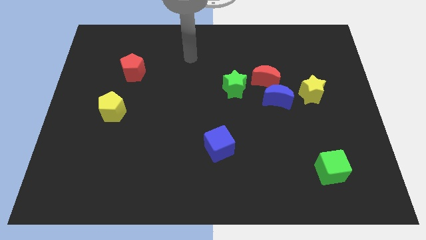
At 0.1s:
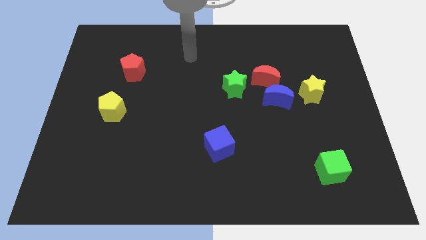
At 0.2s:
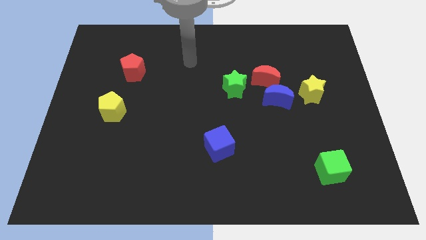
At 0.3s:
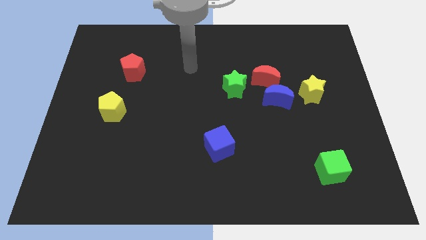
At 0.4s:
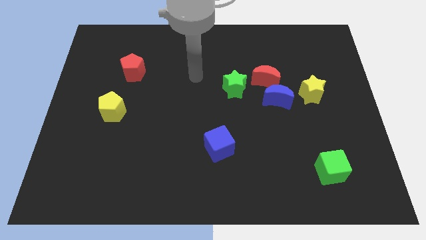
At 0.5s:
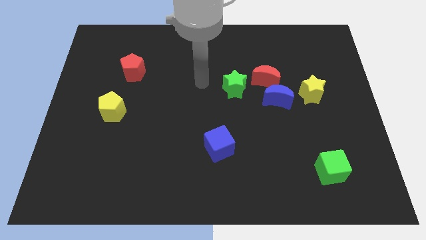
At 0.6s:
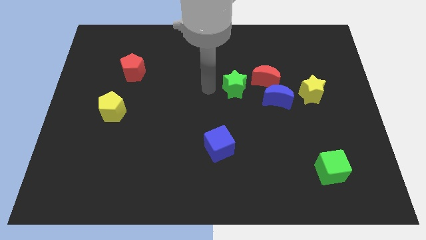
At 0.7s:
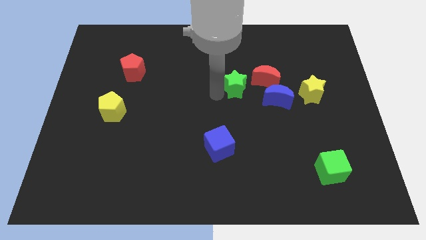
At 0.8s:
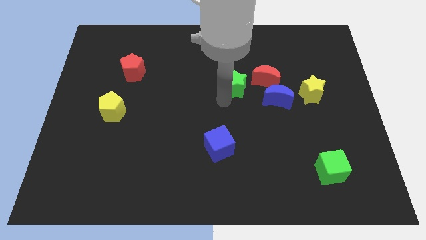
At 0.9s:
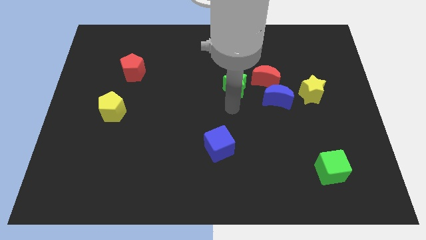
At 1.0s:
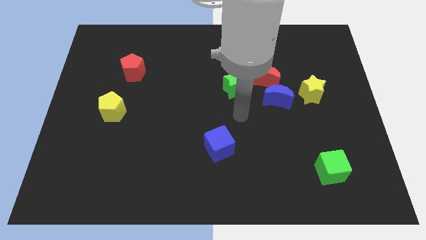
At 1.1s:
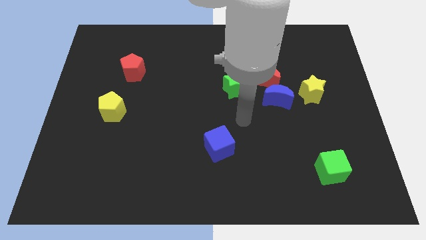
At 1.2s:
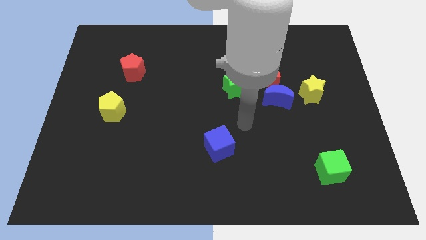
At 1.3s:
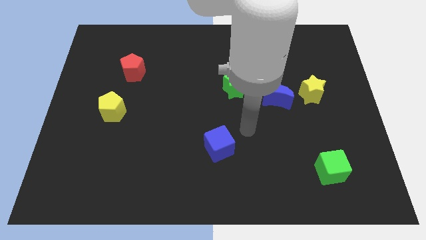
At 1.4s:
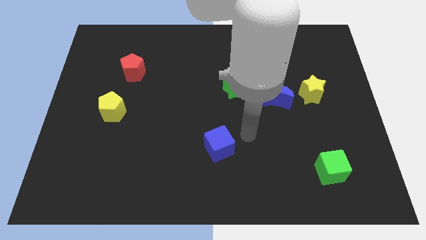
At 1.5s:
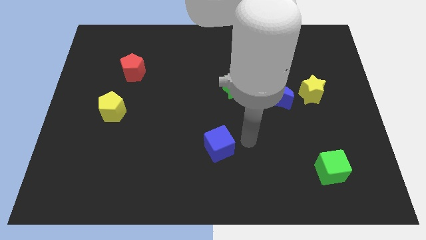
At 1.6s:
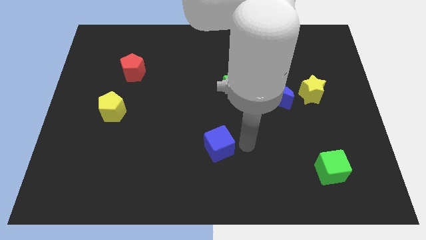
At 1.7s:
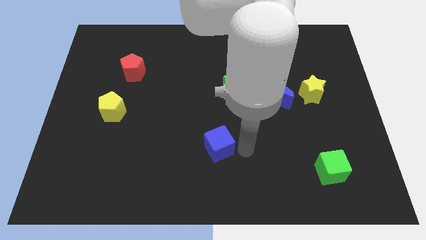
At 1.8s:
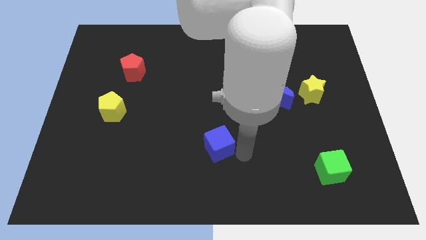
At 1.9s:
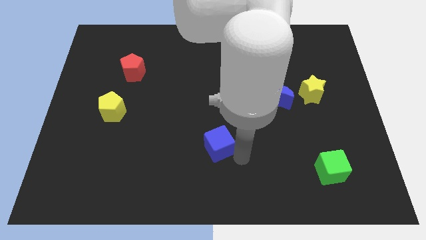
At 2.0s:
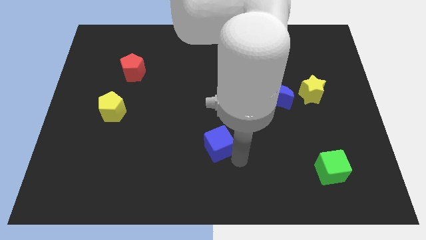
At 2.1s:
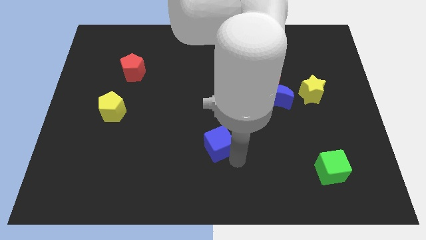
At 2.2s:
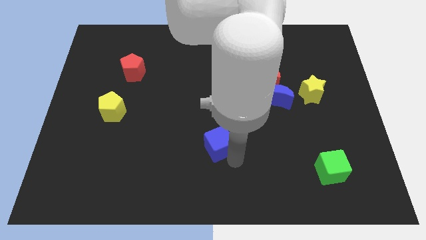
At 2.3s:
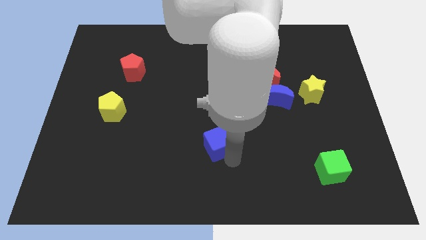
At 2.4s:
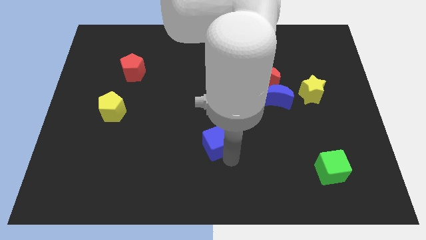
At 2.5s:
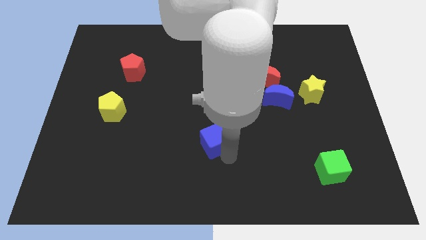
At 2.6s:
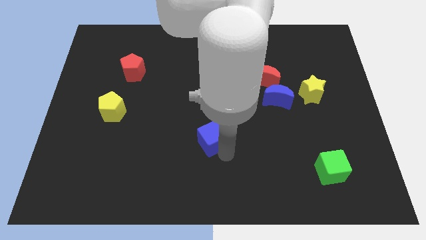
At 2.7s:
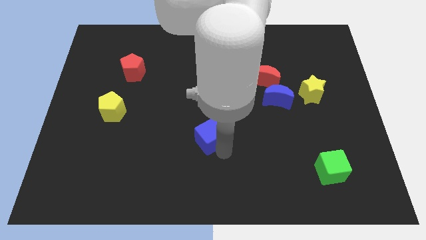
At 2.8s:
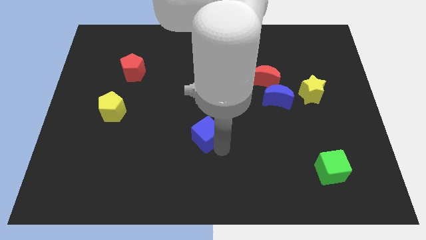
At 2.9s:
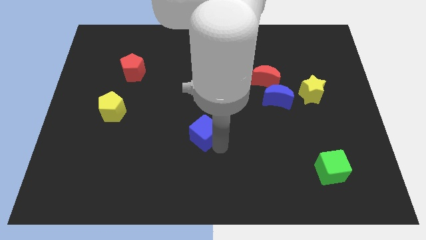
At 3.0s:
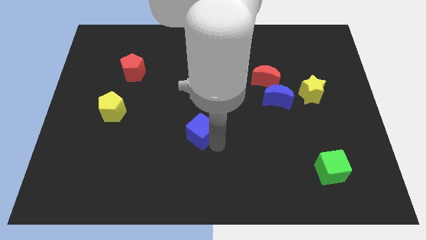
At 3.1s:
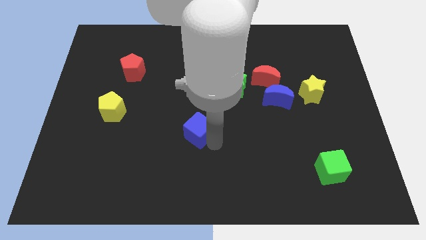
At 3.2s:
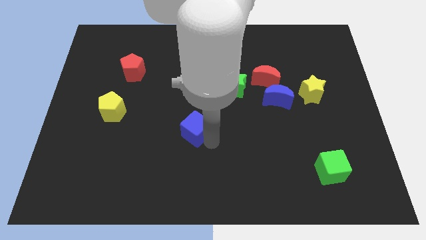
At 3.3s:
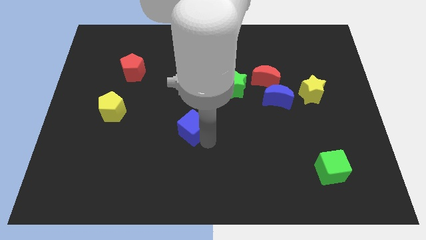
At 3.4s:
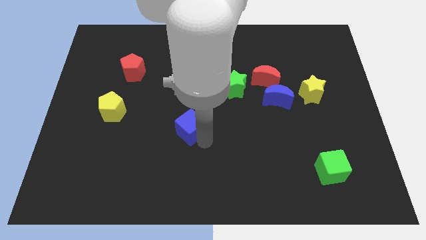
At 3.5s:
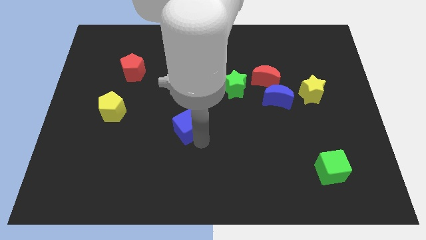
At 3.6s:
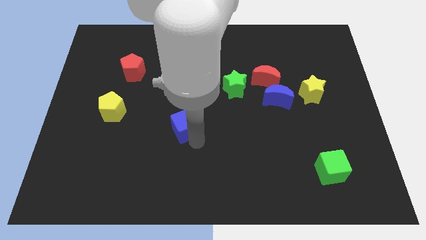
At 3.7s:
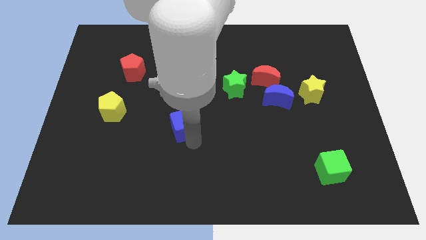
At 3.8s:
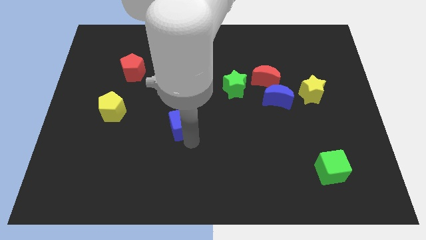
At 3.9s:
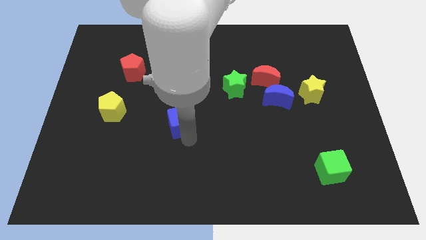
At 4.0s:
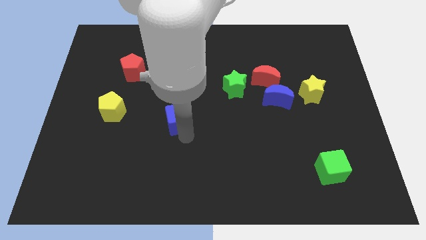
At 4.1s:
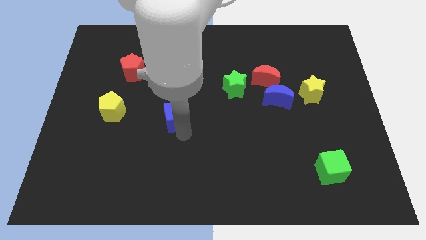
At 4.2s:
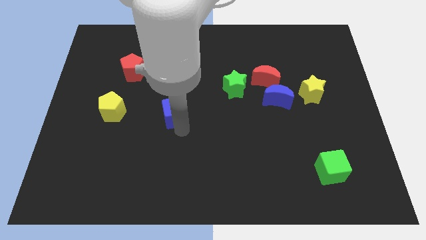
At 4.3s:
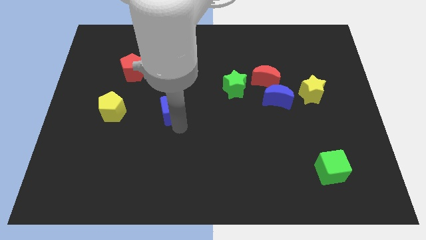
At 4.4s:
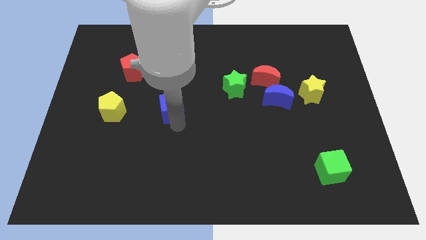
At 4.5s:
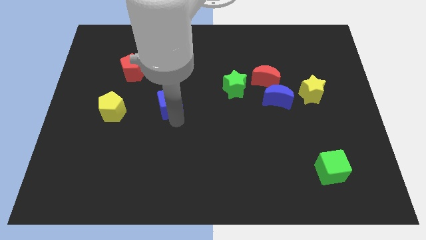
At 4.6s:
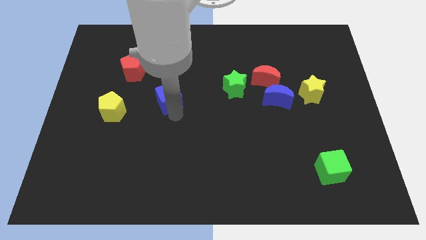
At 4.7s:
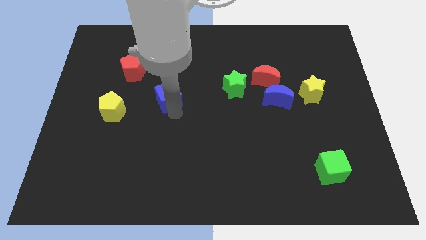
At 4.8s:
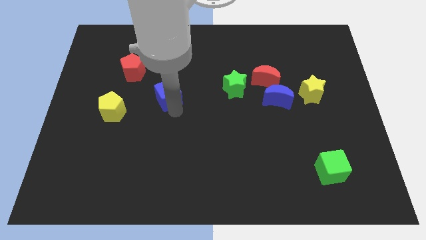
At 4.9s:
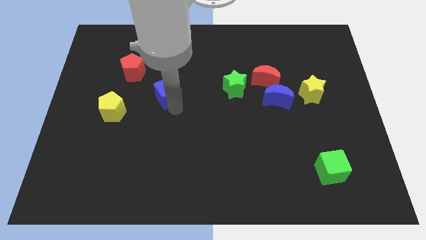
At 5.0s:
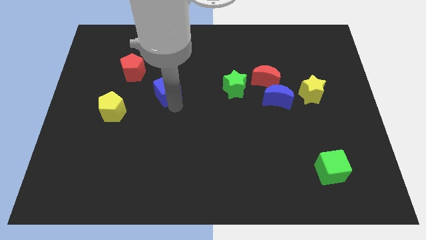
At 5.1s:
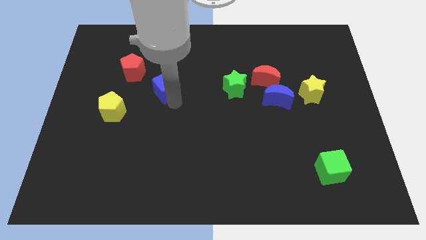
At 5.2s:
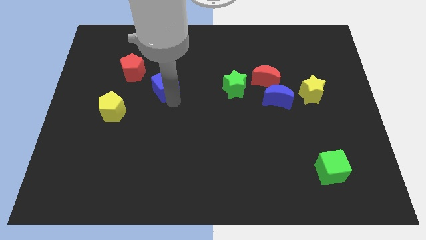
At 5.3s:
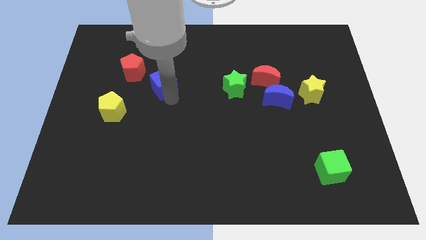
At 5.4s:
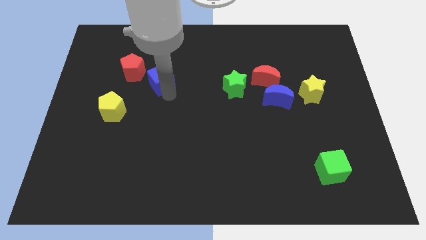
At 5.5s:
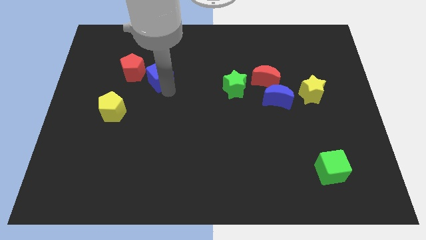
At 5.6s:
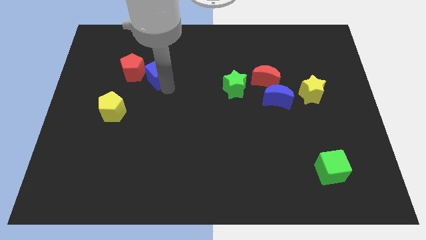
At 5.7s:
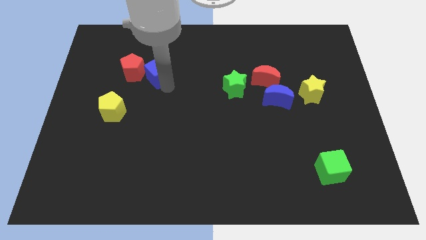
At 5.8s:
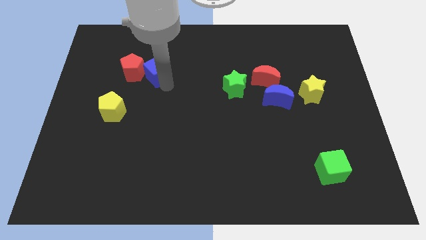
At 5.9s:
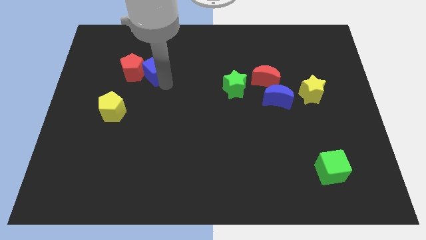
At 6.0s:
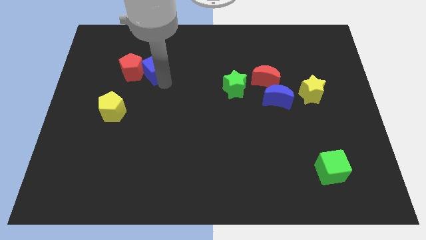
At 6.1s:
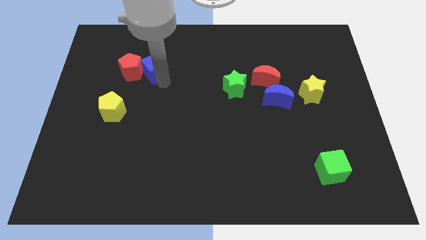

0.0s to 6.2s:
put the blue cube next to the red pentagon

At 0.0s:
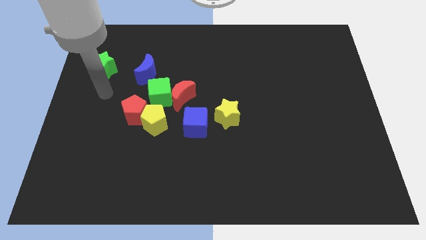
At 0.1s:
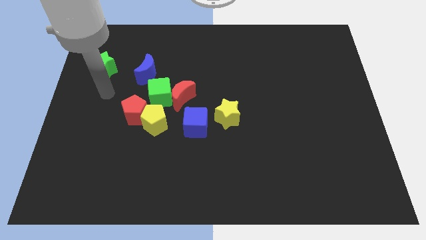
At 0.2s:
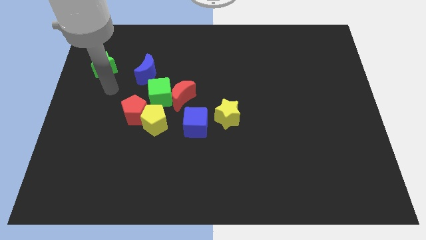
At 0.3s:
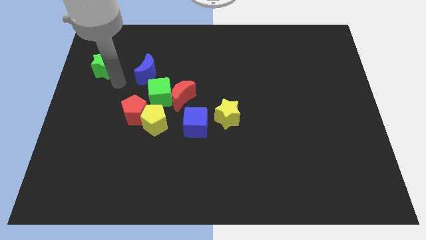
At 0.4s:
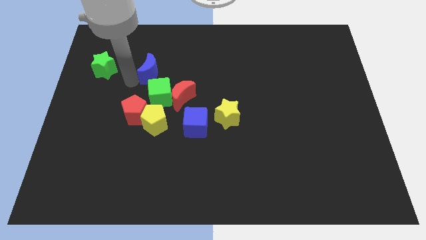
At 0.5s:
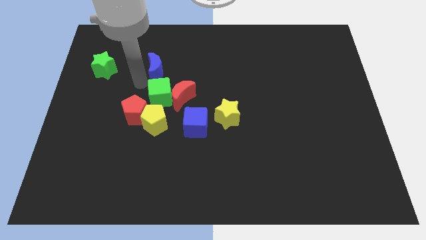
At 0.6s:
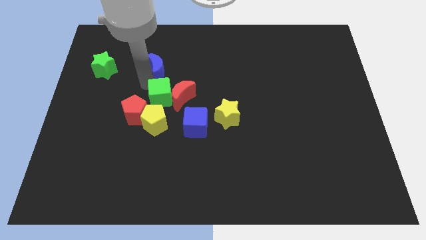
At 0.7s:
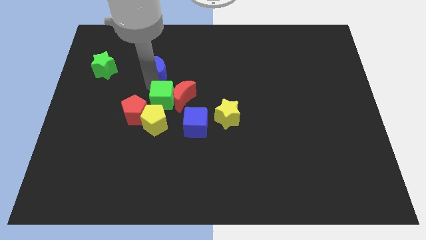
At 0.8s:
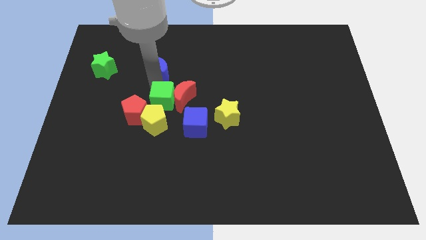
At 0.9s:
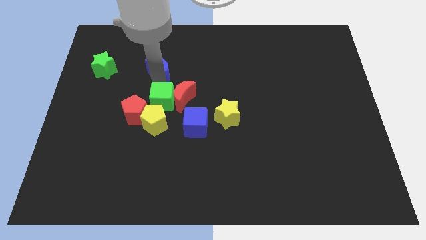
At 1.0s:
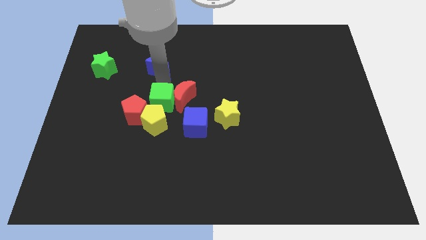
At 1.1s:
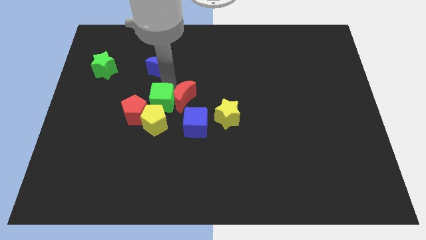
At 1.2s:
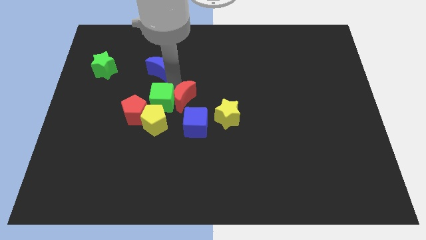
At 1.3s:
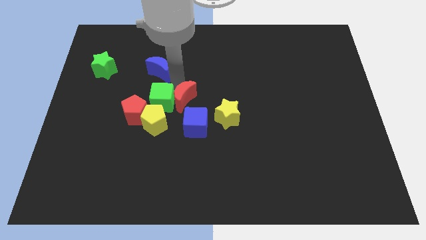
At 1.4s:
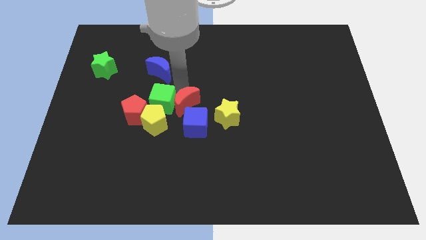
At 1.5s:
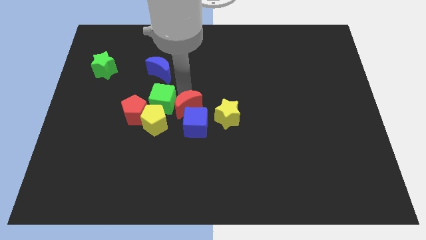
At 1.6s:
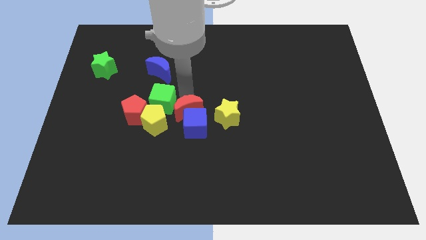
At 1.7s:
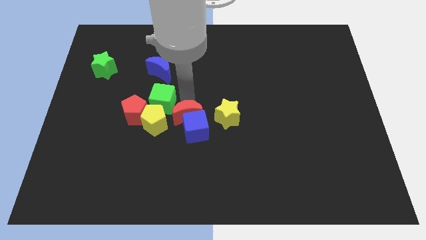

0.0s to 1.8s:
move the red moon next to the blue cube

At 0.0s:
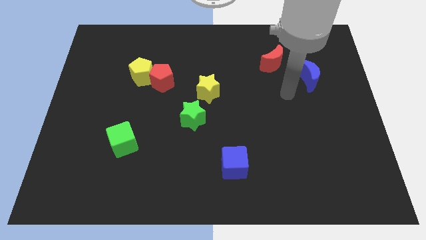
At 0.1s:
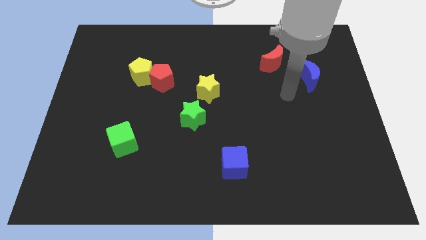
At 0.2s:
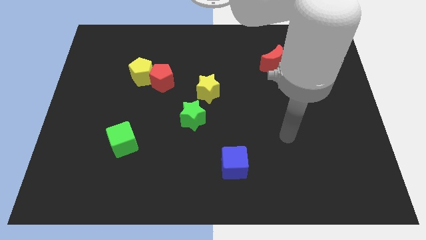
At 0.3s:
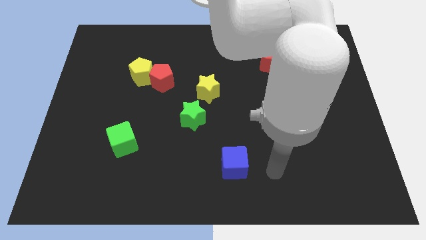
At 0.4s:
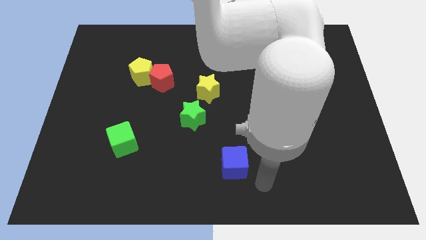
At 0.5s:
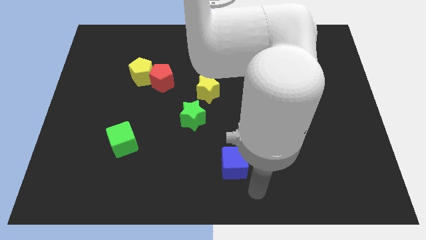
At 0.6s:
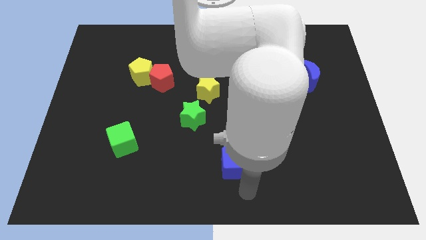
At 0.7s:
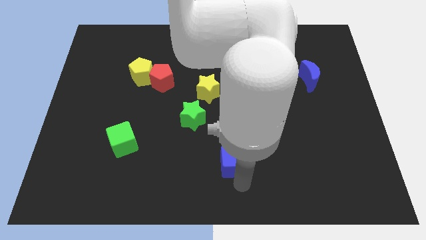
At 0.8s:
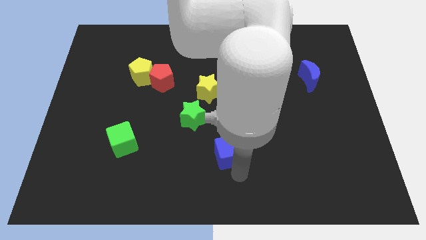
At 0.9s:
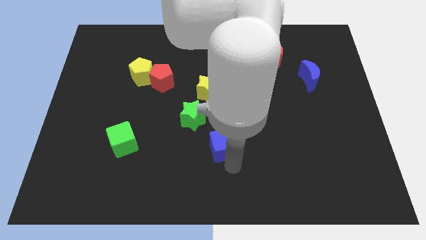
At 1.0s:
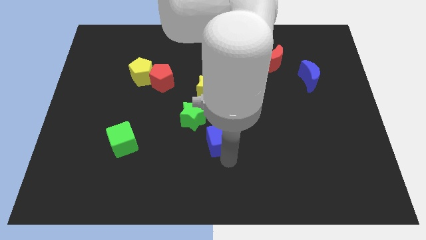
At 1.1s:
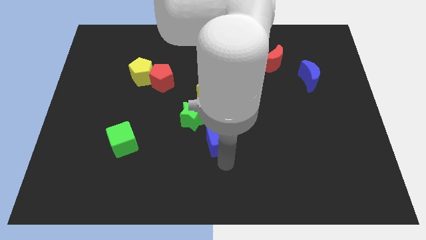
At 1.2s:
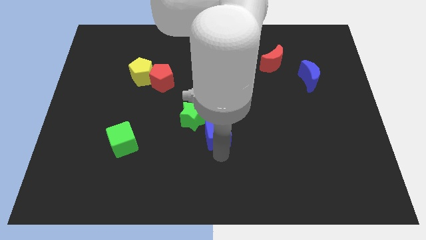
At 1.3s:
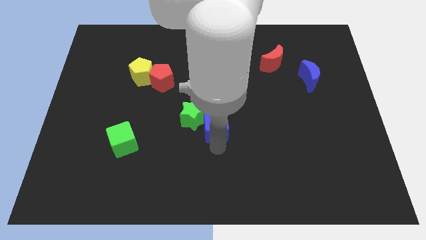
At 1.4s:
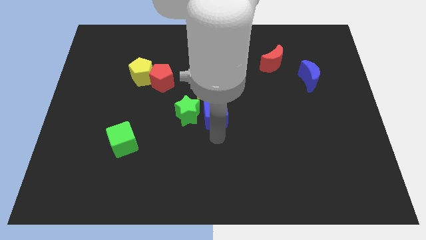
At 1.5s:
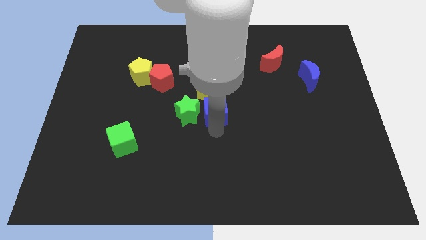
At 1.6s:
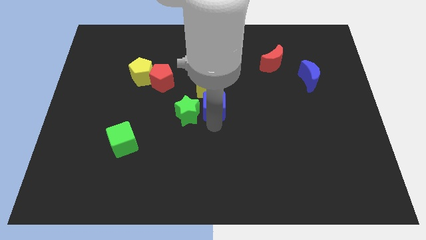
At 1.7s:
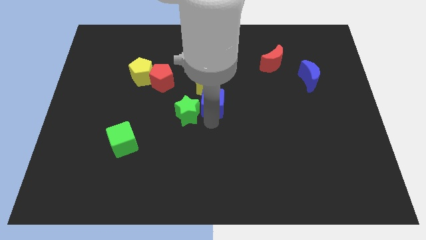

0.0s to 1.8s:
move the blue cube next to the yellow star
